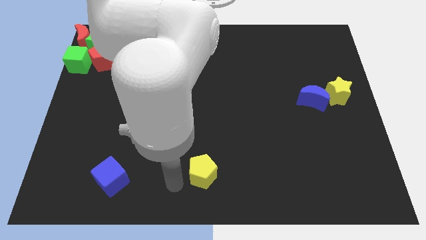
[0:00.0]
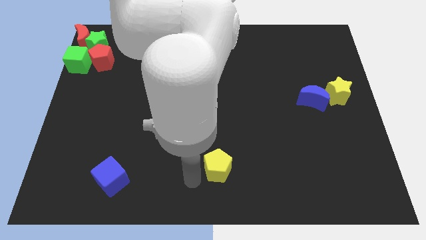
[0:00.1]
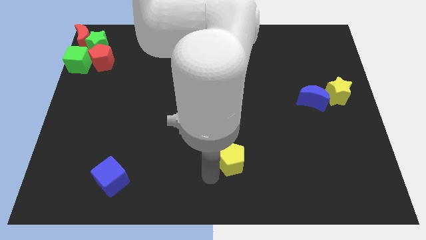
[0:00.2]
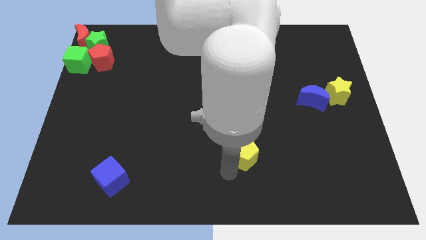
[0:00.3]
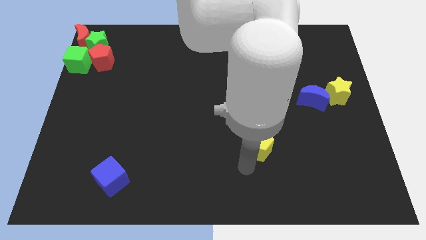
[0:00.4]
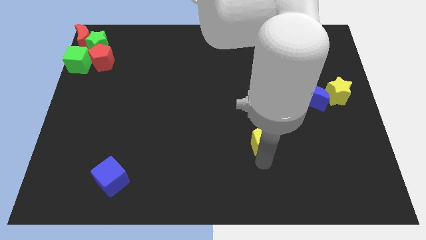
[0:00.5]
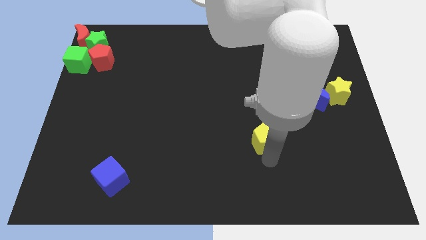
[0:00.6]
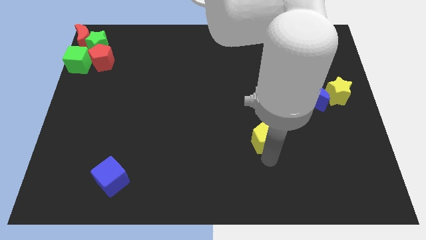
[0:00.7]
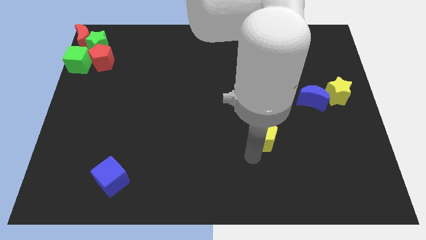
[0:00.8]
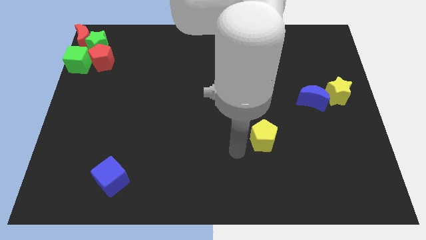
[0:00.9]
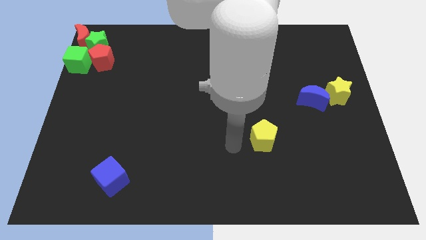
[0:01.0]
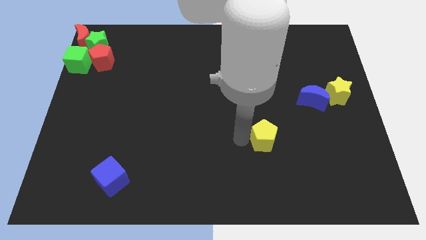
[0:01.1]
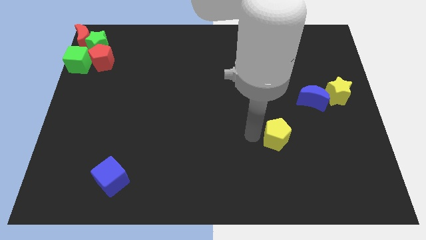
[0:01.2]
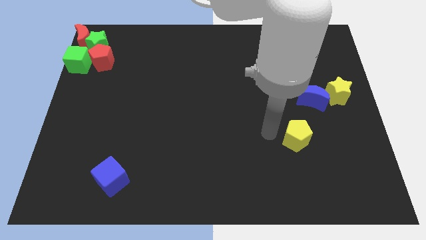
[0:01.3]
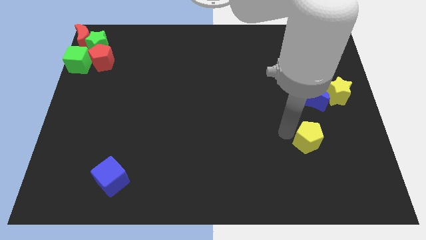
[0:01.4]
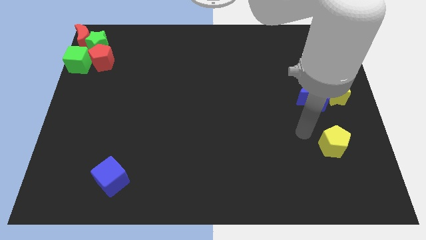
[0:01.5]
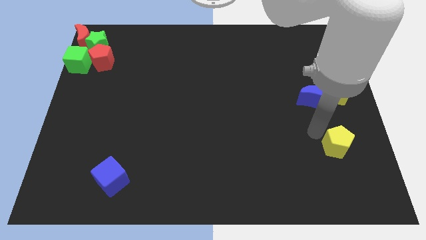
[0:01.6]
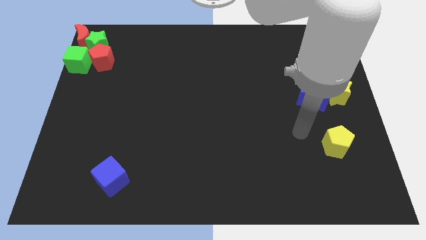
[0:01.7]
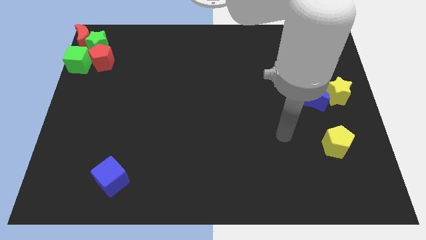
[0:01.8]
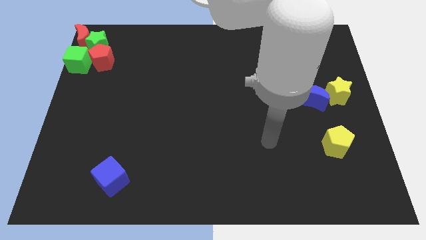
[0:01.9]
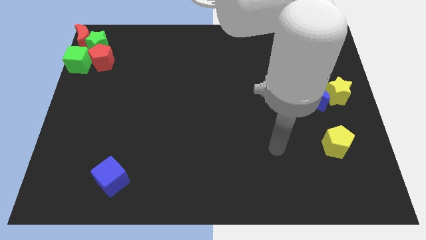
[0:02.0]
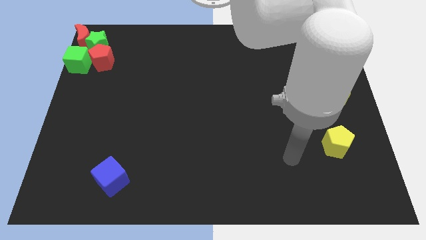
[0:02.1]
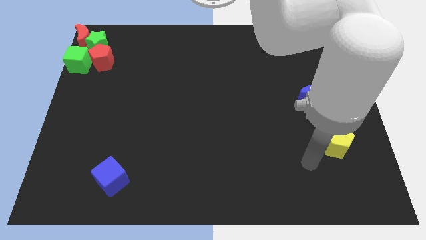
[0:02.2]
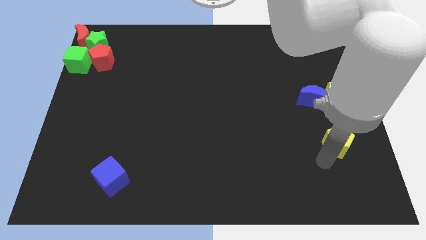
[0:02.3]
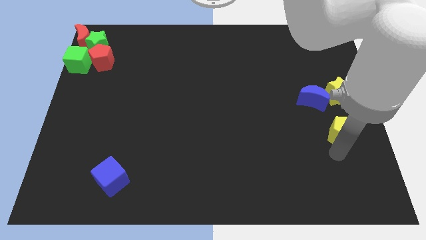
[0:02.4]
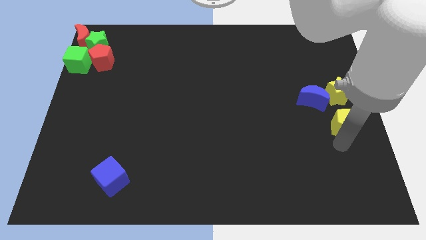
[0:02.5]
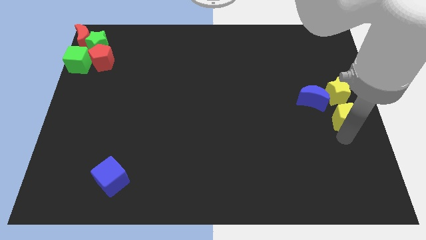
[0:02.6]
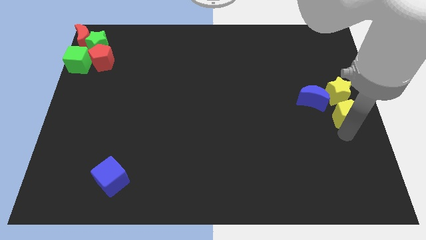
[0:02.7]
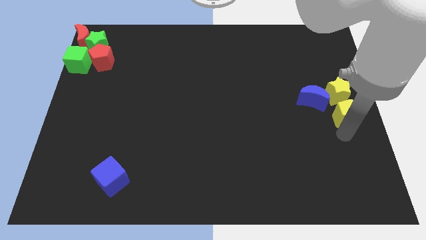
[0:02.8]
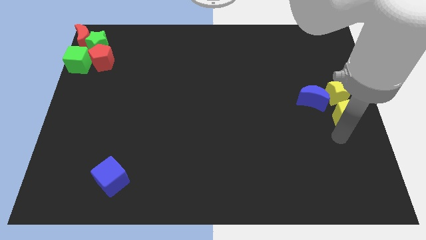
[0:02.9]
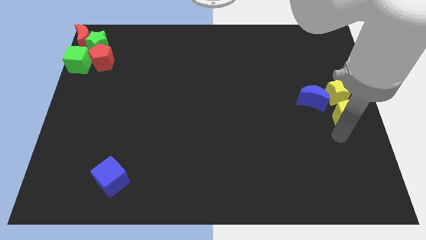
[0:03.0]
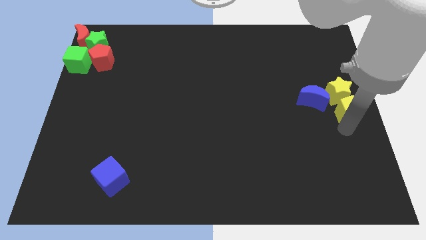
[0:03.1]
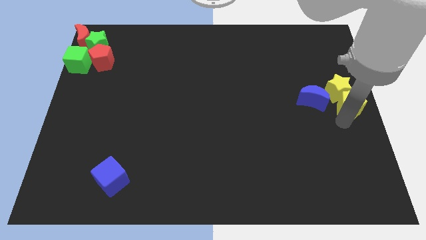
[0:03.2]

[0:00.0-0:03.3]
push the yellow pentagon to the bottom of the yellow stra

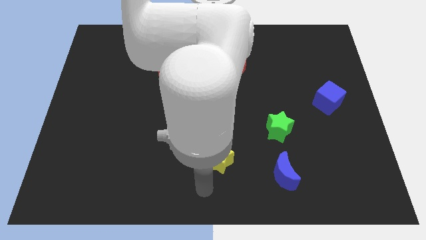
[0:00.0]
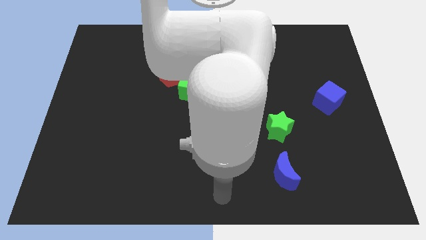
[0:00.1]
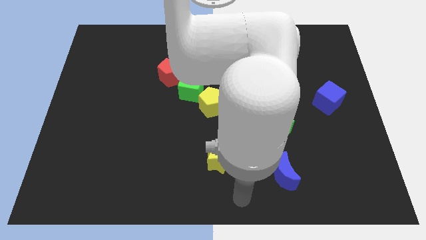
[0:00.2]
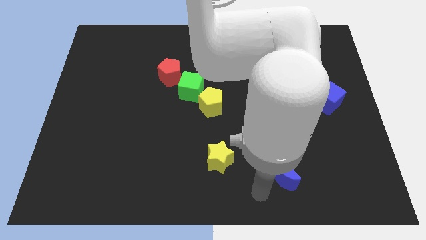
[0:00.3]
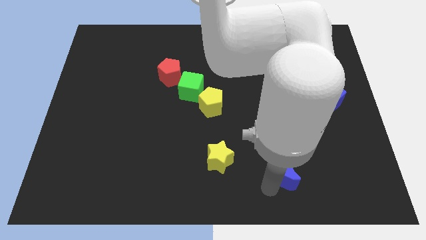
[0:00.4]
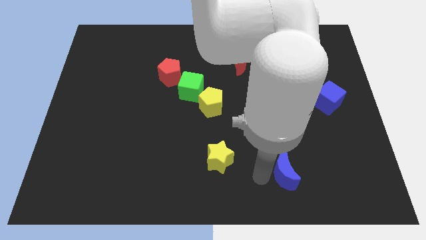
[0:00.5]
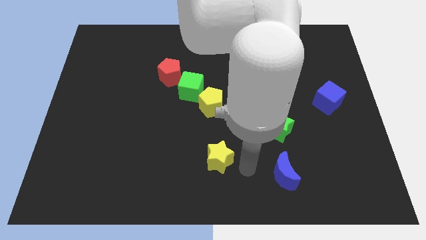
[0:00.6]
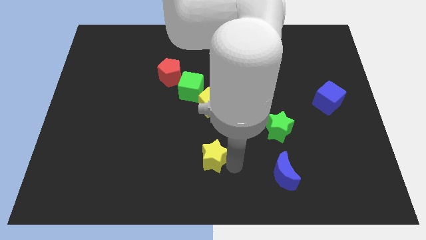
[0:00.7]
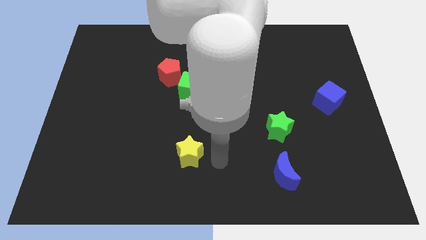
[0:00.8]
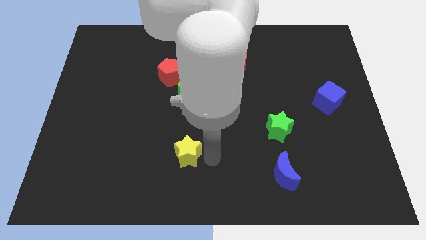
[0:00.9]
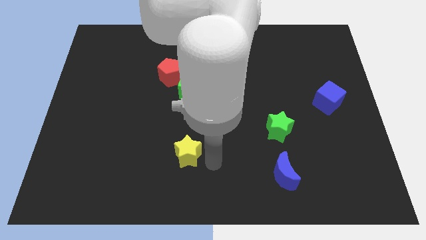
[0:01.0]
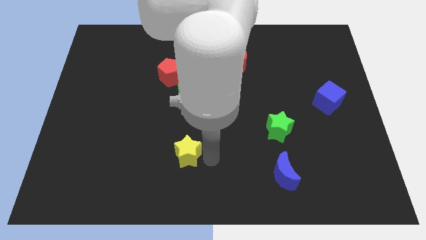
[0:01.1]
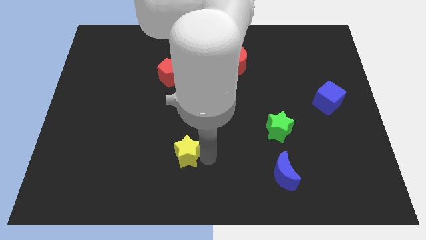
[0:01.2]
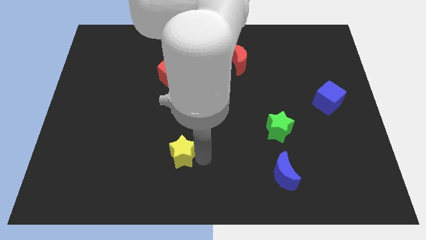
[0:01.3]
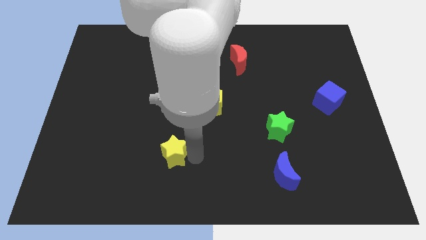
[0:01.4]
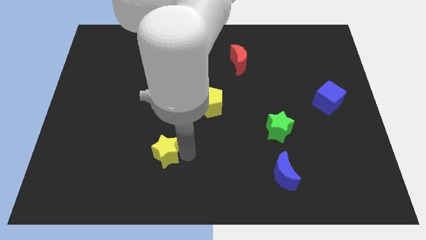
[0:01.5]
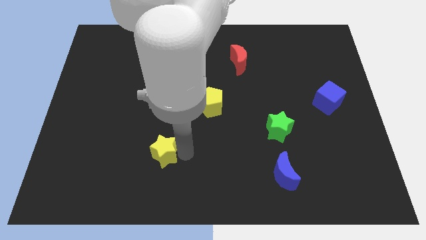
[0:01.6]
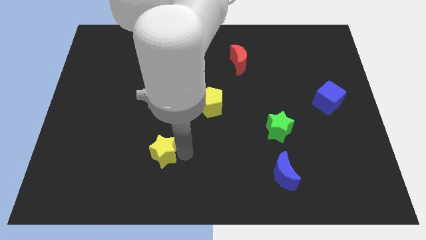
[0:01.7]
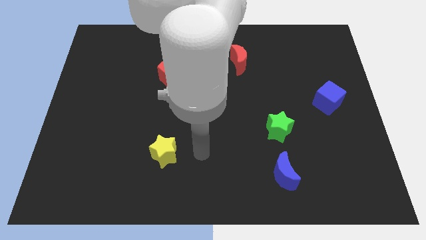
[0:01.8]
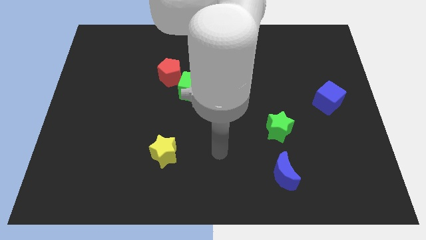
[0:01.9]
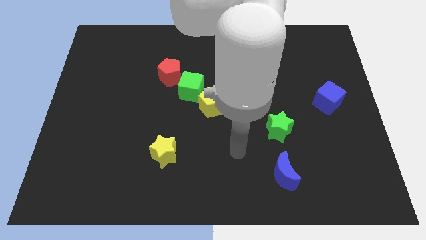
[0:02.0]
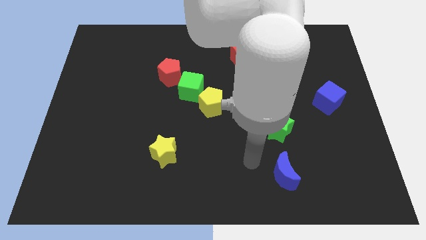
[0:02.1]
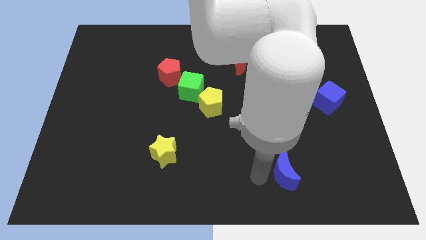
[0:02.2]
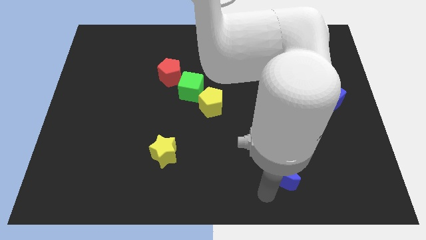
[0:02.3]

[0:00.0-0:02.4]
place the yellow star diagonal to the yellow pentagon

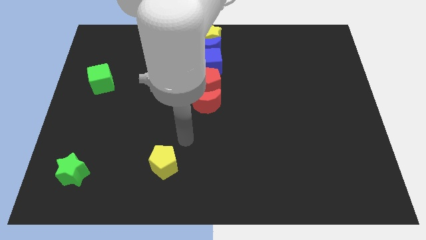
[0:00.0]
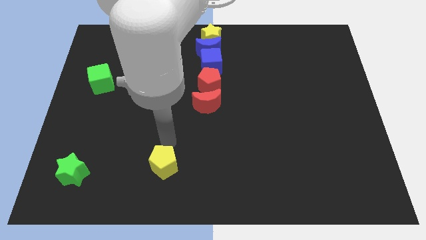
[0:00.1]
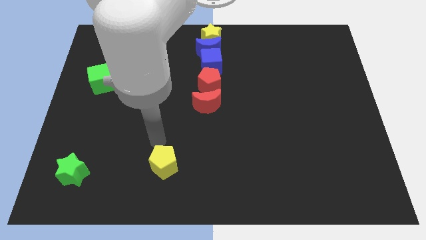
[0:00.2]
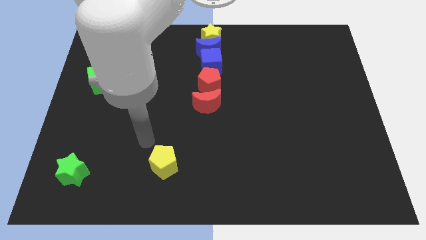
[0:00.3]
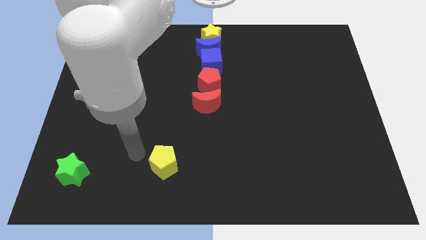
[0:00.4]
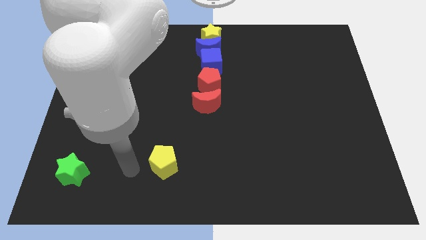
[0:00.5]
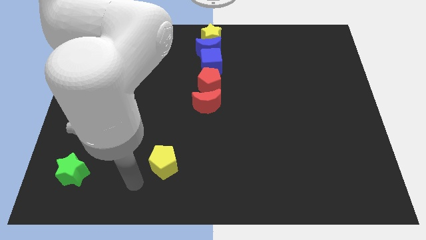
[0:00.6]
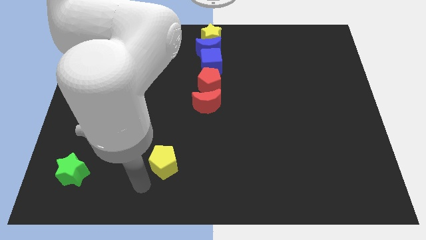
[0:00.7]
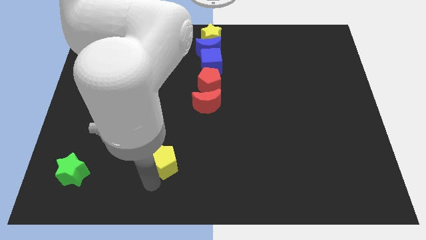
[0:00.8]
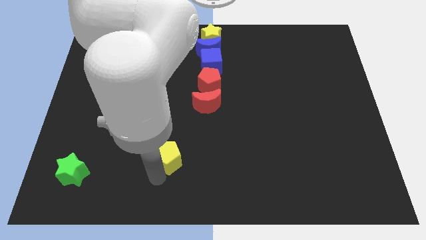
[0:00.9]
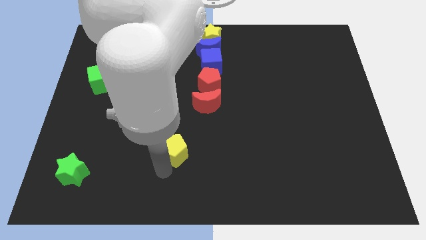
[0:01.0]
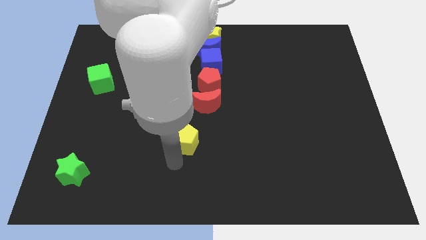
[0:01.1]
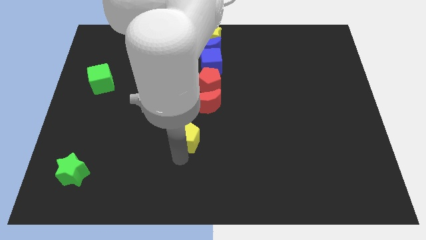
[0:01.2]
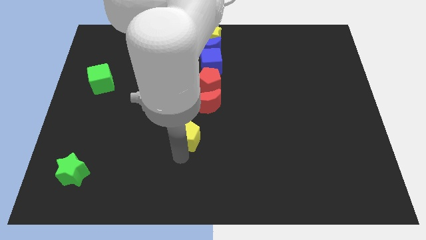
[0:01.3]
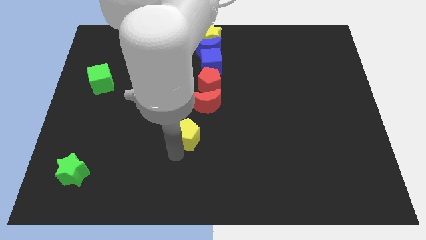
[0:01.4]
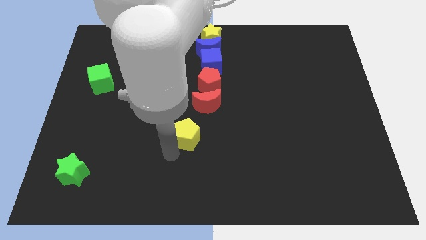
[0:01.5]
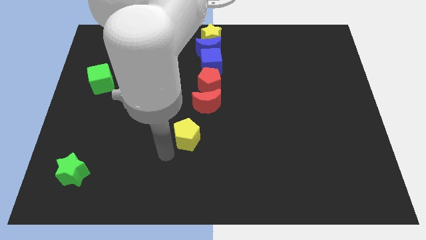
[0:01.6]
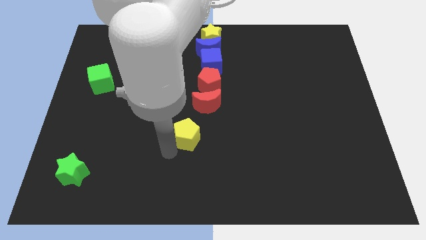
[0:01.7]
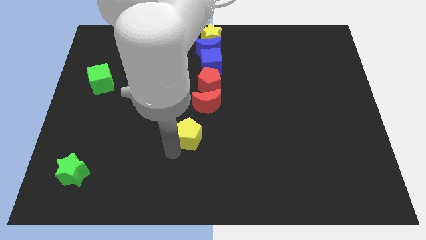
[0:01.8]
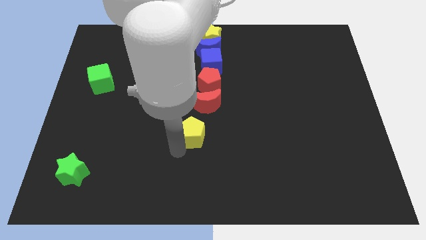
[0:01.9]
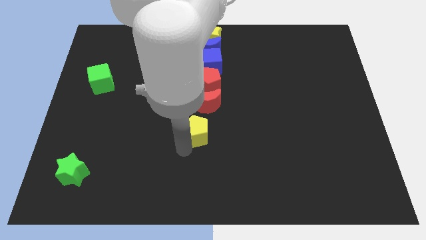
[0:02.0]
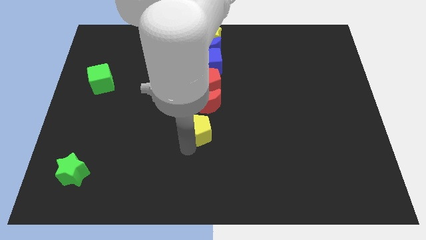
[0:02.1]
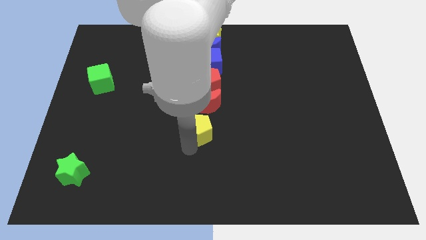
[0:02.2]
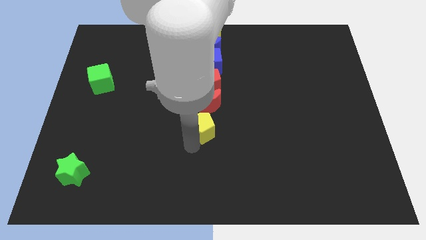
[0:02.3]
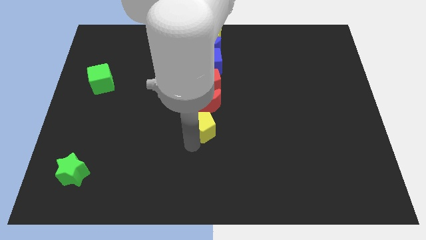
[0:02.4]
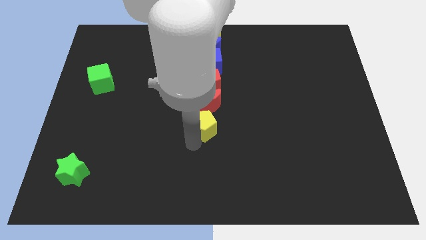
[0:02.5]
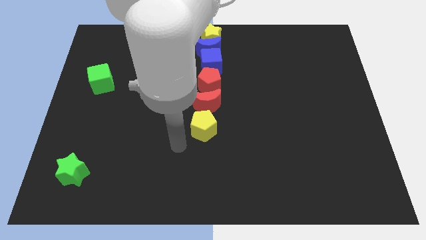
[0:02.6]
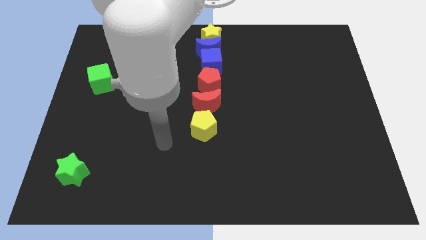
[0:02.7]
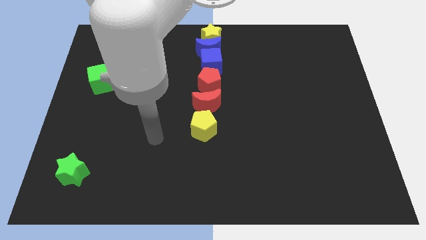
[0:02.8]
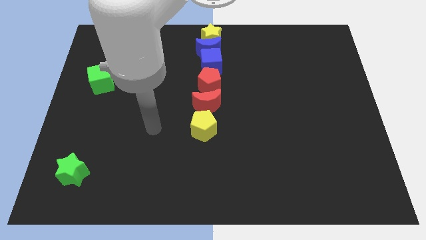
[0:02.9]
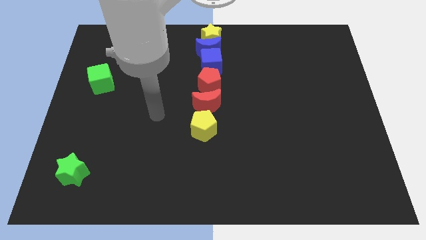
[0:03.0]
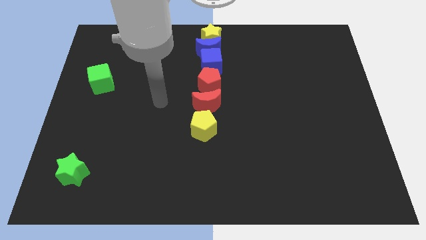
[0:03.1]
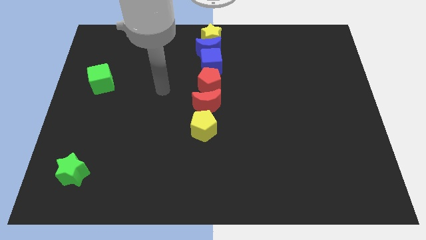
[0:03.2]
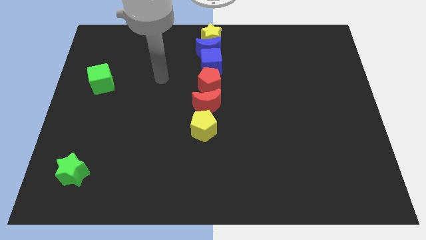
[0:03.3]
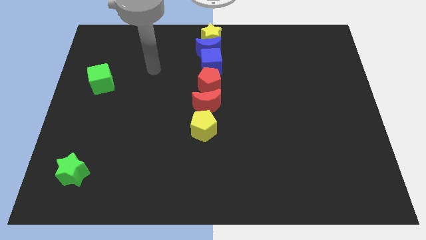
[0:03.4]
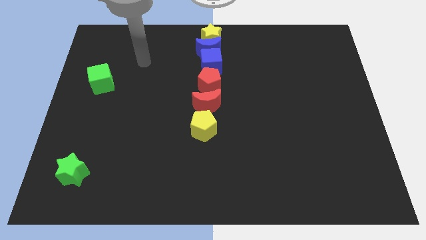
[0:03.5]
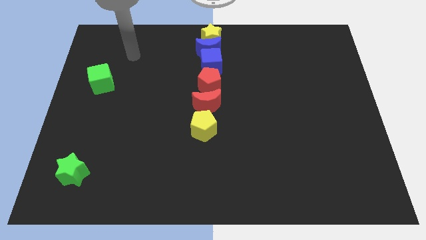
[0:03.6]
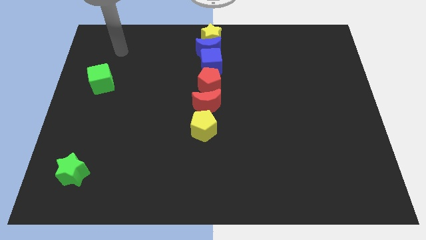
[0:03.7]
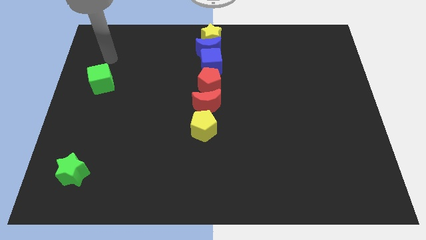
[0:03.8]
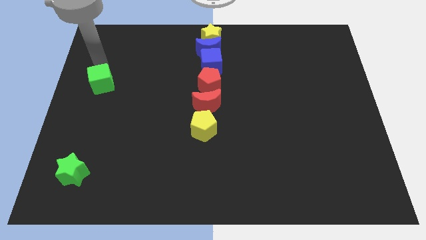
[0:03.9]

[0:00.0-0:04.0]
place the yellow pentagon below the red moon
